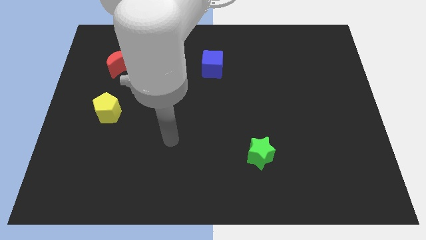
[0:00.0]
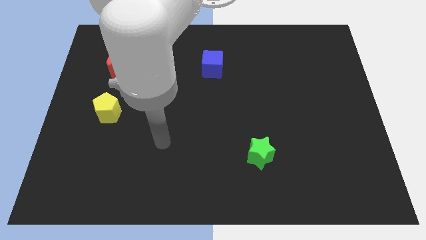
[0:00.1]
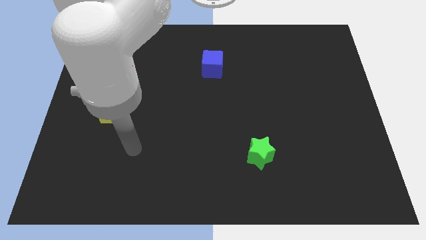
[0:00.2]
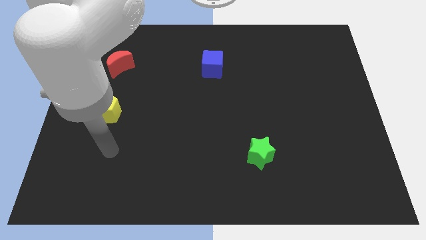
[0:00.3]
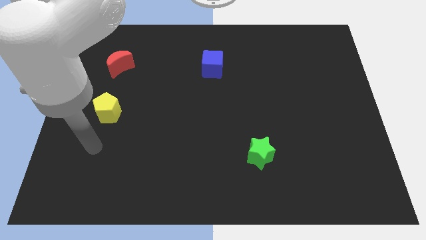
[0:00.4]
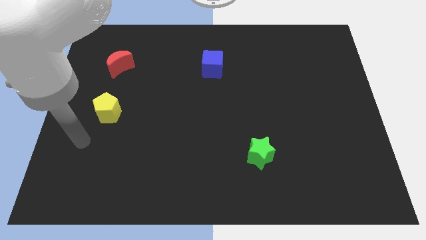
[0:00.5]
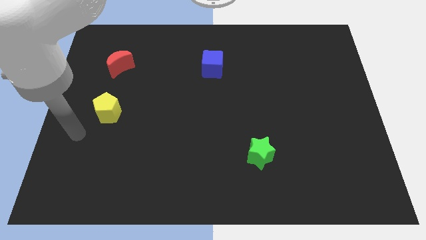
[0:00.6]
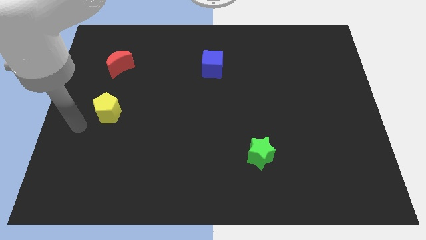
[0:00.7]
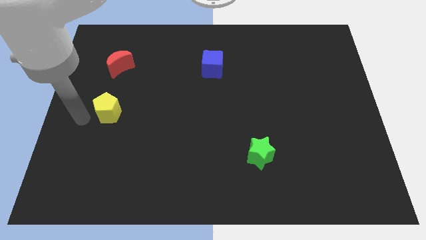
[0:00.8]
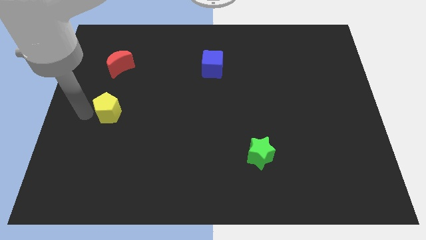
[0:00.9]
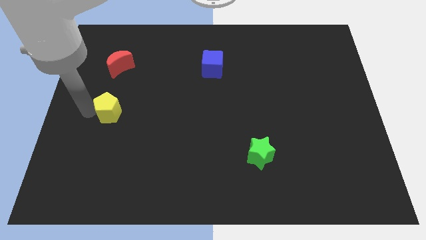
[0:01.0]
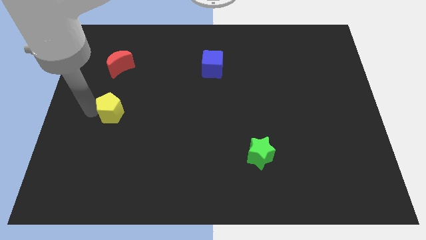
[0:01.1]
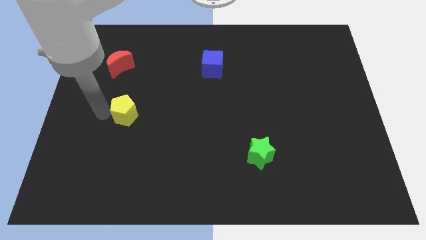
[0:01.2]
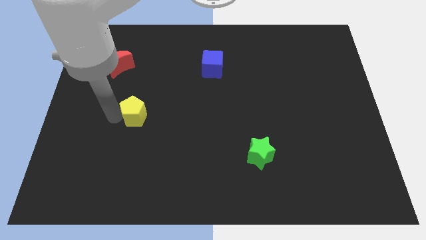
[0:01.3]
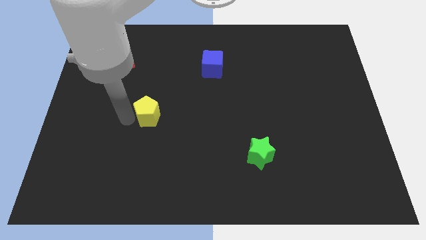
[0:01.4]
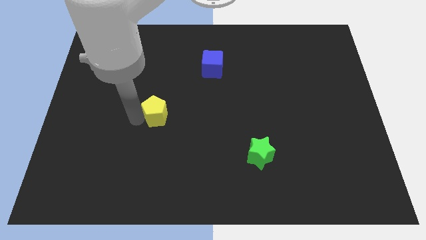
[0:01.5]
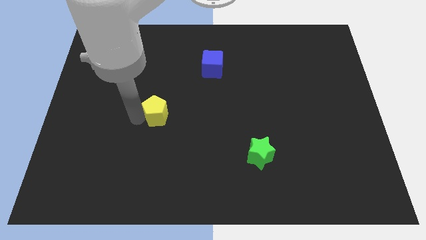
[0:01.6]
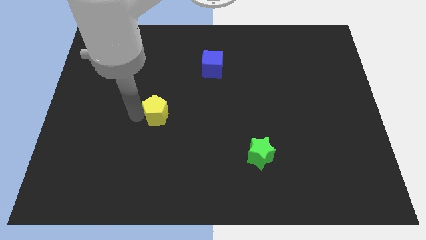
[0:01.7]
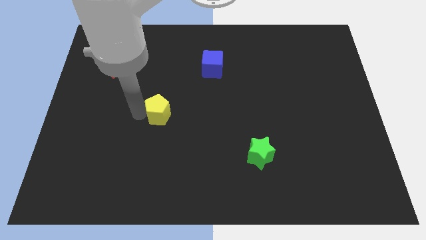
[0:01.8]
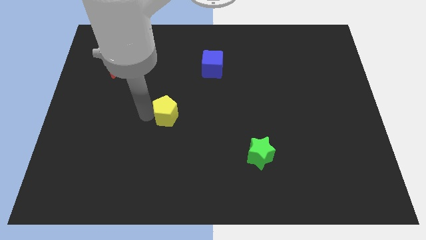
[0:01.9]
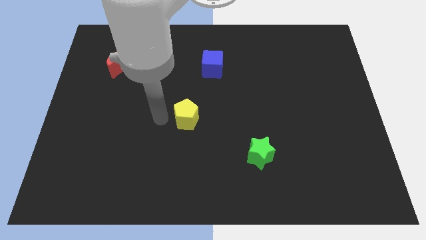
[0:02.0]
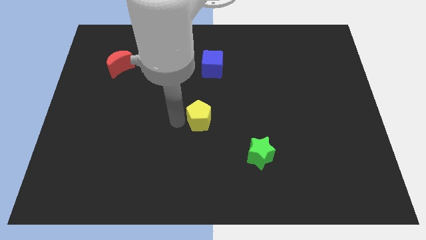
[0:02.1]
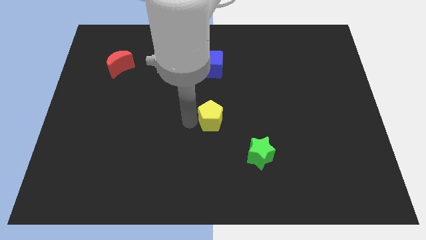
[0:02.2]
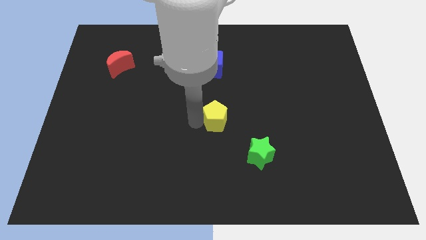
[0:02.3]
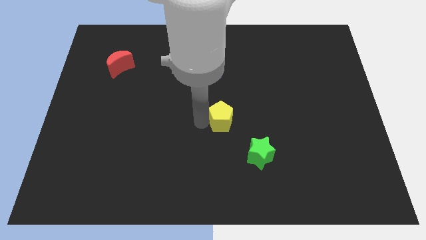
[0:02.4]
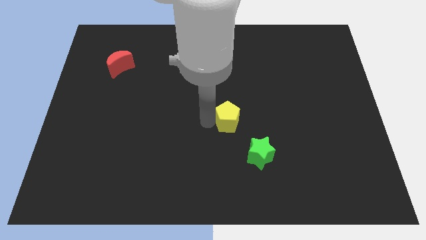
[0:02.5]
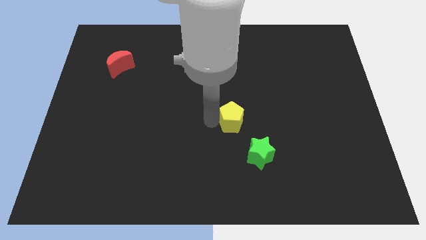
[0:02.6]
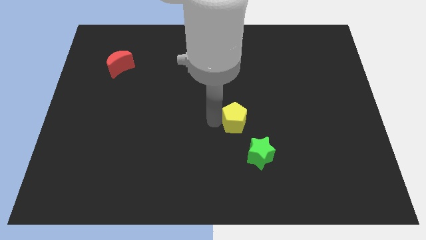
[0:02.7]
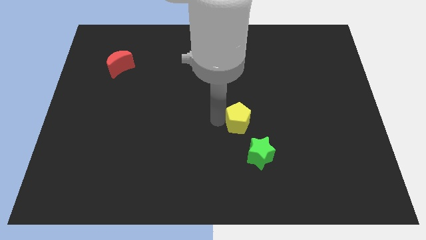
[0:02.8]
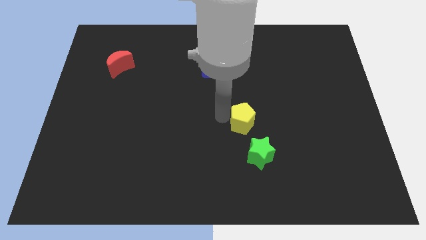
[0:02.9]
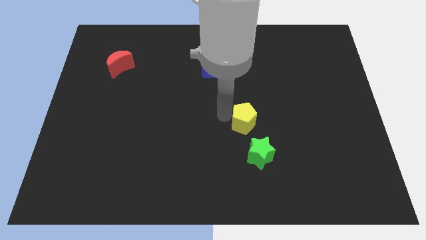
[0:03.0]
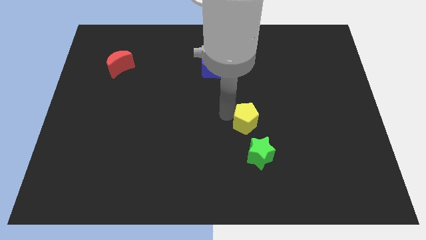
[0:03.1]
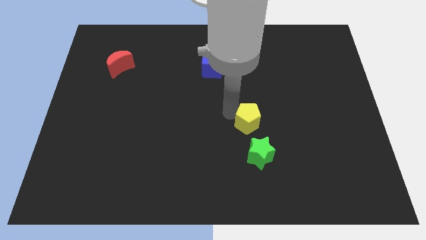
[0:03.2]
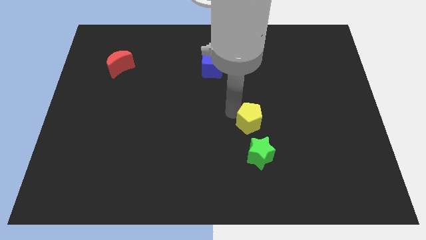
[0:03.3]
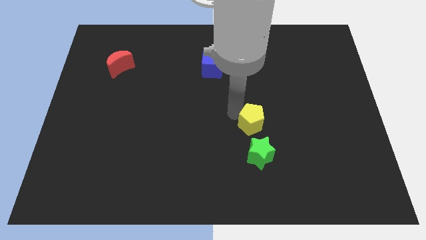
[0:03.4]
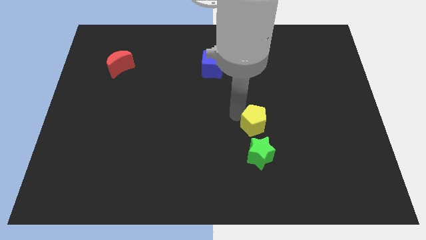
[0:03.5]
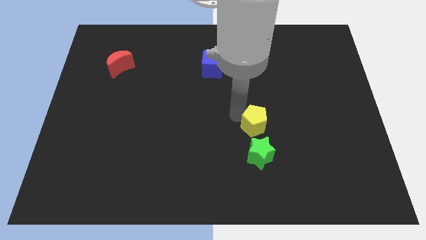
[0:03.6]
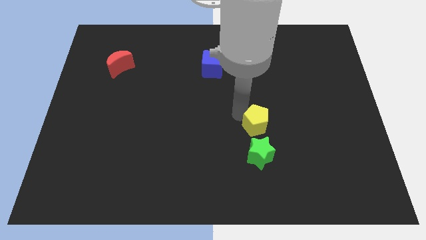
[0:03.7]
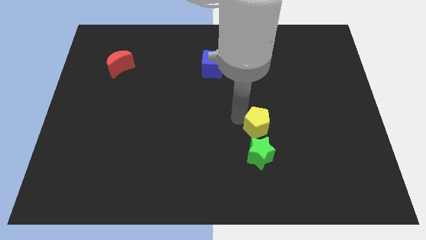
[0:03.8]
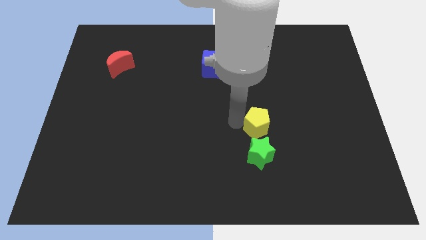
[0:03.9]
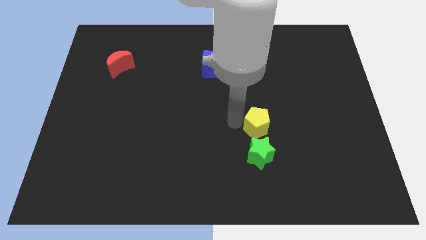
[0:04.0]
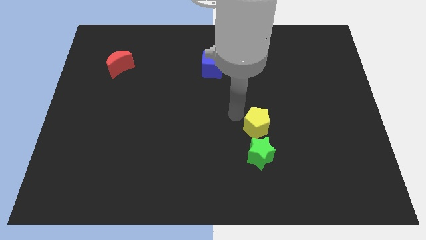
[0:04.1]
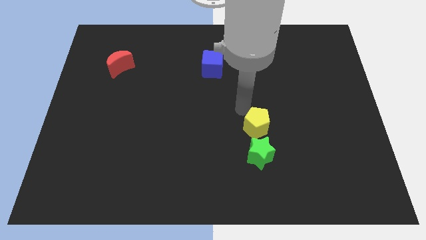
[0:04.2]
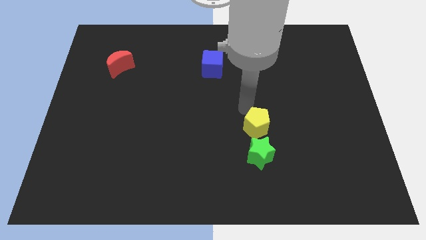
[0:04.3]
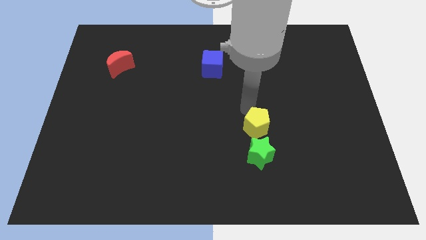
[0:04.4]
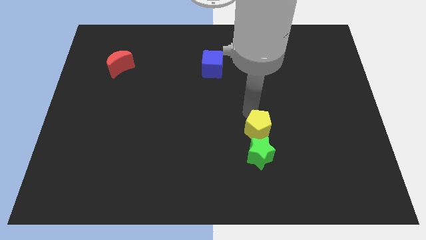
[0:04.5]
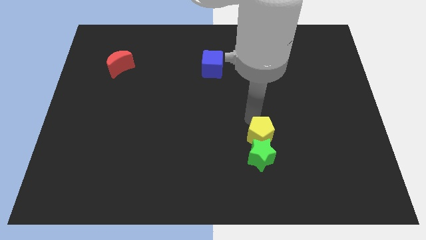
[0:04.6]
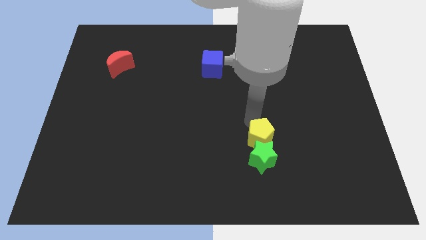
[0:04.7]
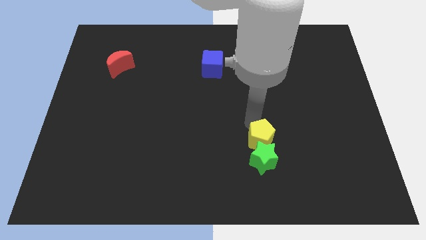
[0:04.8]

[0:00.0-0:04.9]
put the yellow pentagon next to the green block

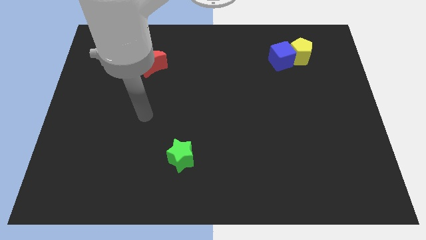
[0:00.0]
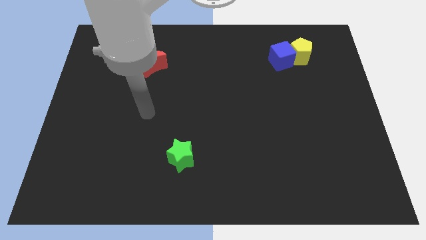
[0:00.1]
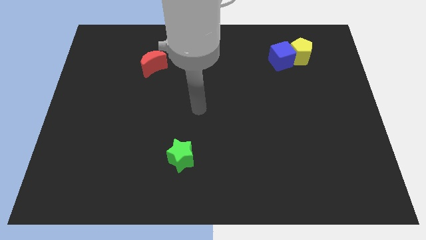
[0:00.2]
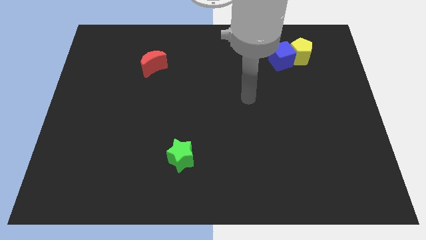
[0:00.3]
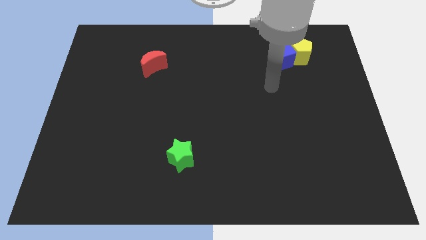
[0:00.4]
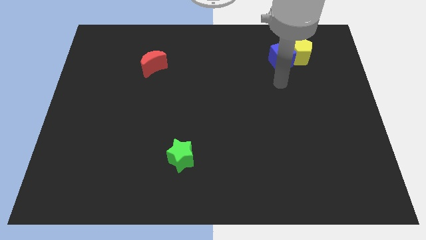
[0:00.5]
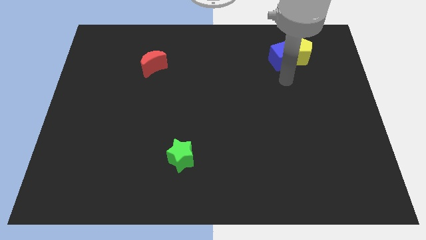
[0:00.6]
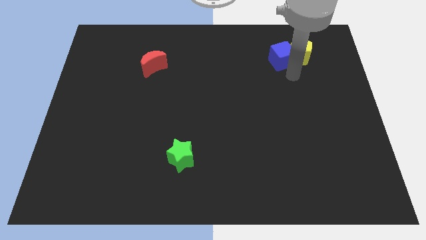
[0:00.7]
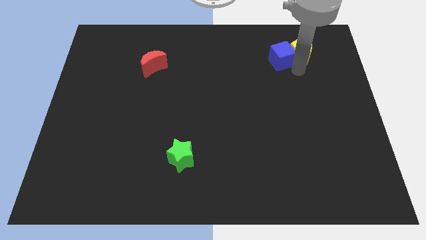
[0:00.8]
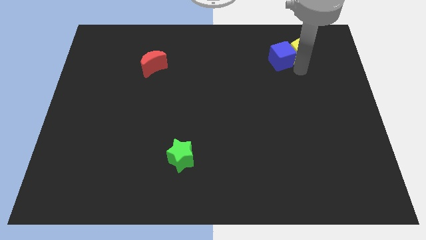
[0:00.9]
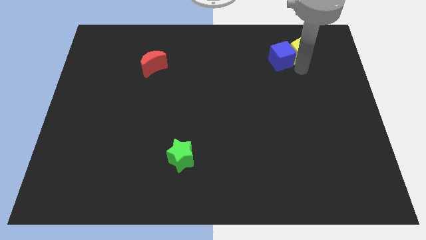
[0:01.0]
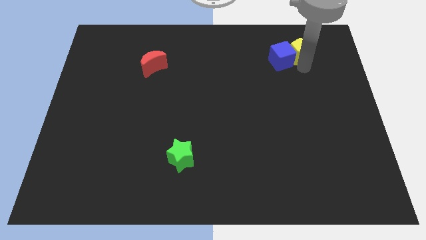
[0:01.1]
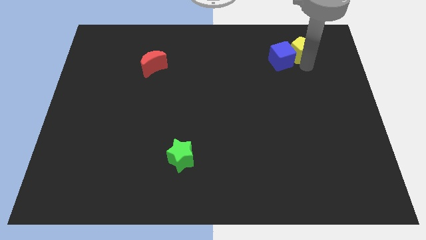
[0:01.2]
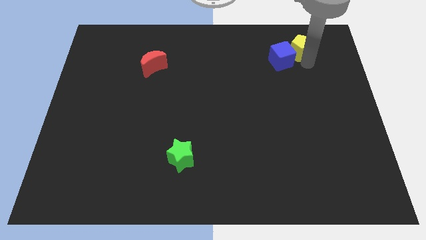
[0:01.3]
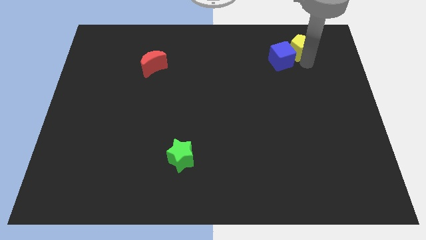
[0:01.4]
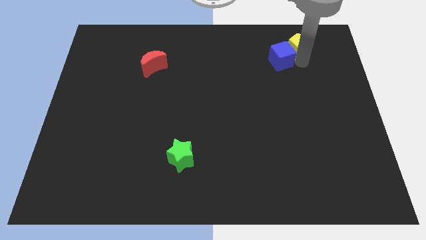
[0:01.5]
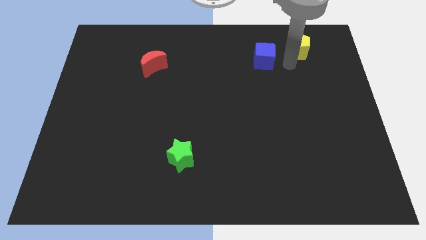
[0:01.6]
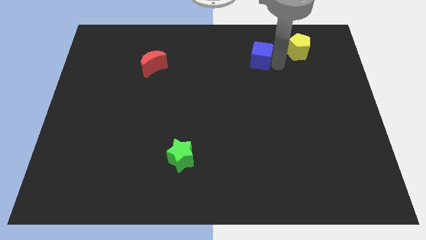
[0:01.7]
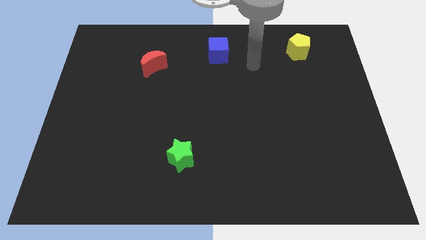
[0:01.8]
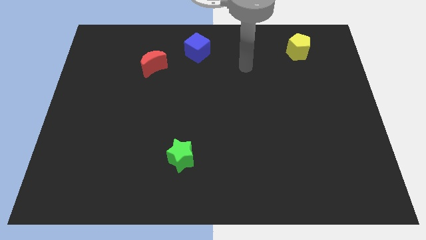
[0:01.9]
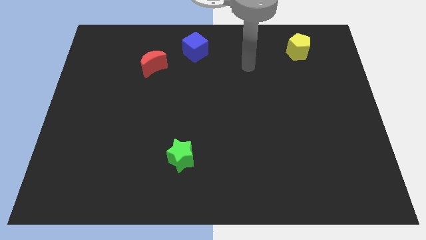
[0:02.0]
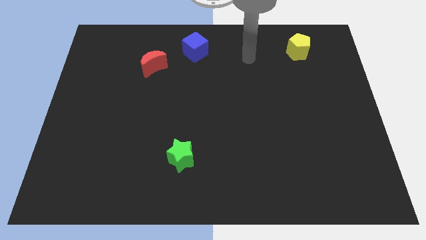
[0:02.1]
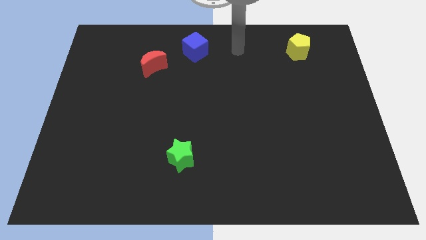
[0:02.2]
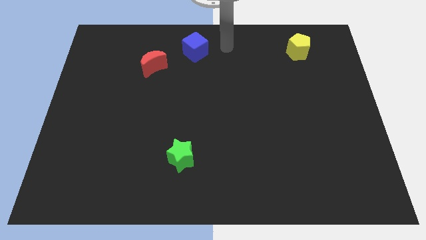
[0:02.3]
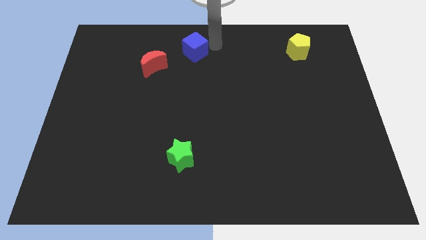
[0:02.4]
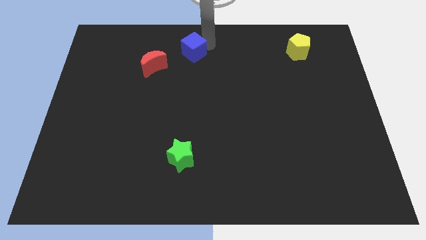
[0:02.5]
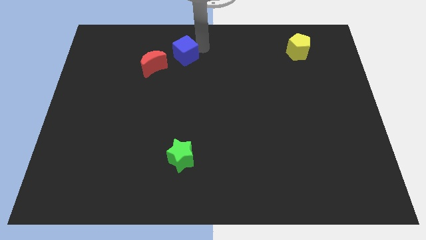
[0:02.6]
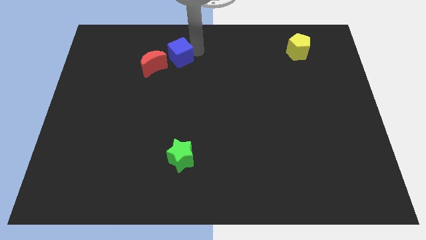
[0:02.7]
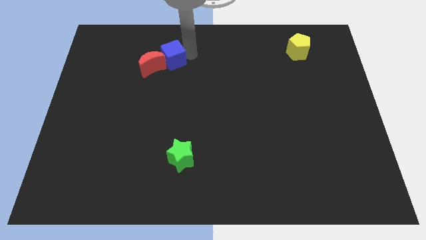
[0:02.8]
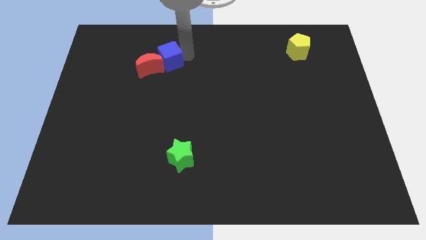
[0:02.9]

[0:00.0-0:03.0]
move the cube close to the moon

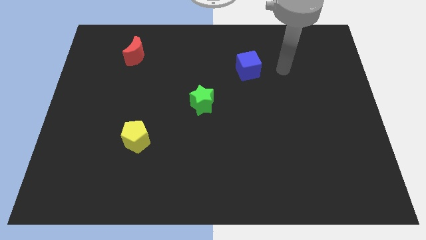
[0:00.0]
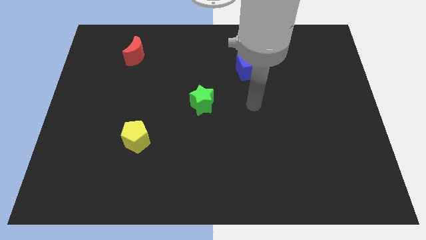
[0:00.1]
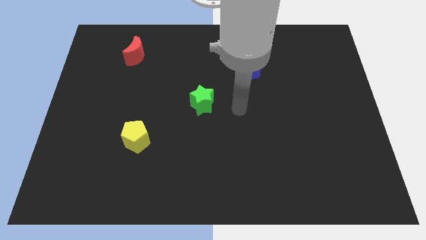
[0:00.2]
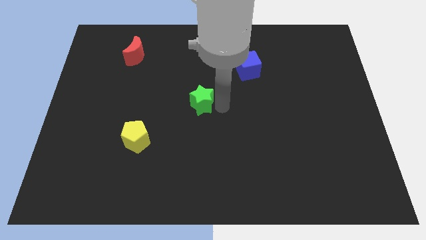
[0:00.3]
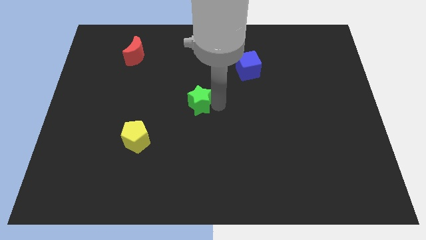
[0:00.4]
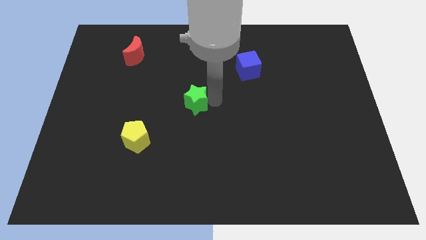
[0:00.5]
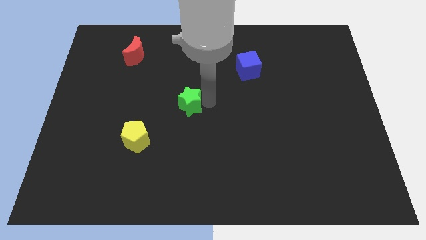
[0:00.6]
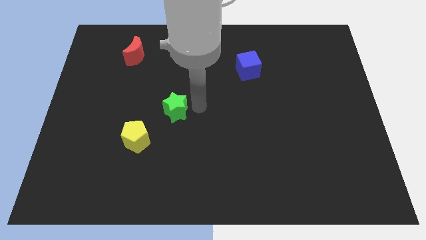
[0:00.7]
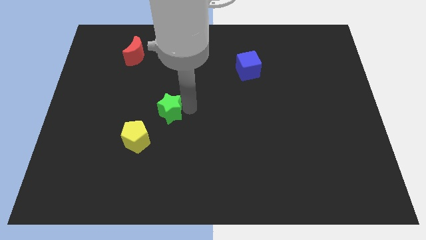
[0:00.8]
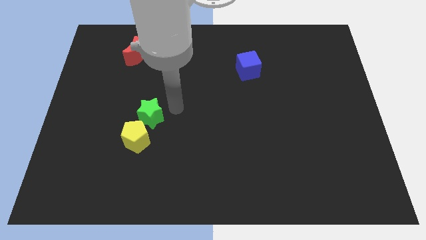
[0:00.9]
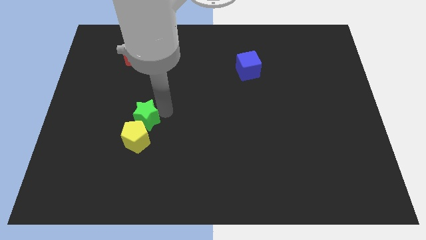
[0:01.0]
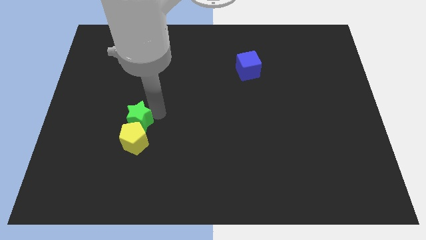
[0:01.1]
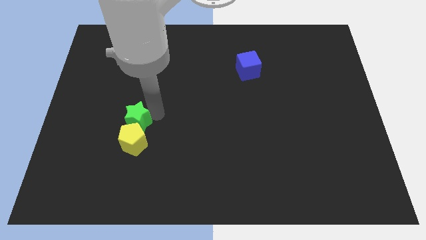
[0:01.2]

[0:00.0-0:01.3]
move the green star close to the yellow block
